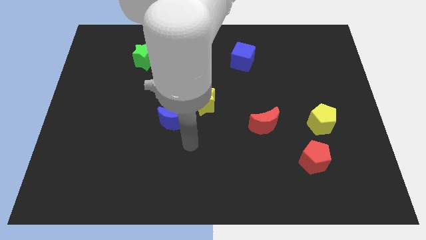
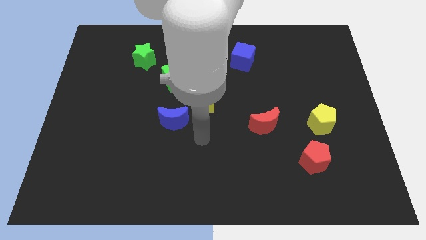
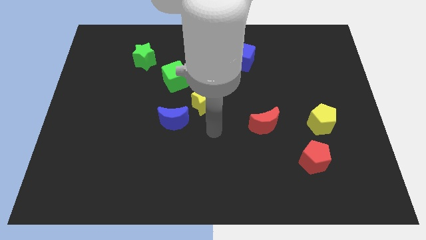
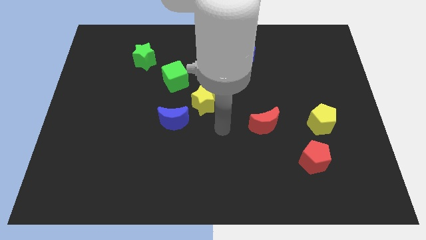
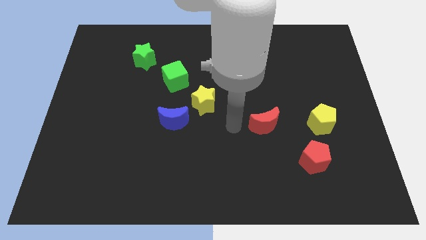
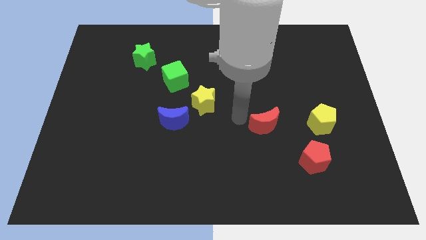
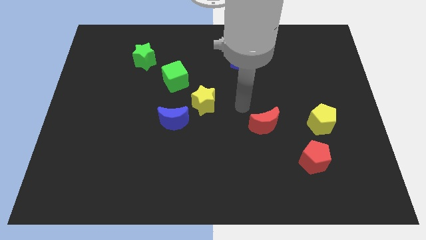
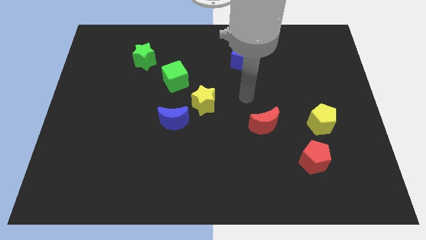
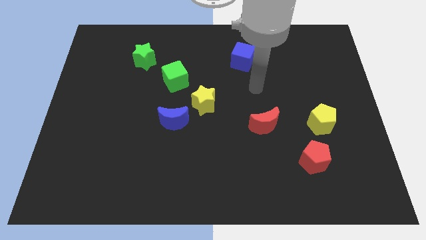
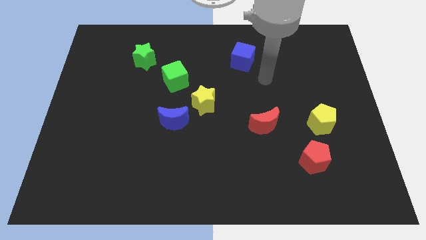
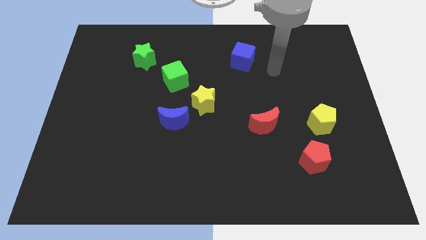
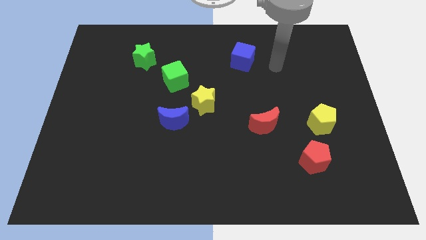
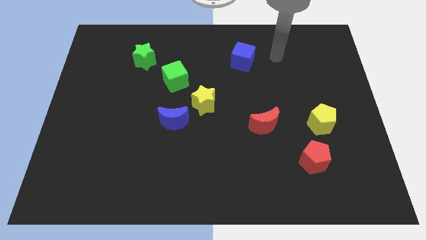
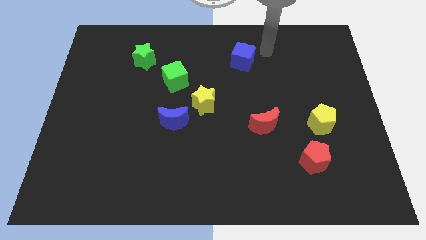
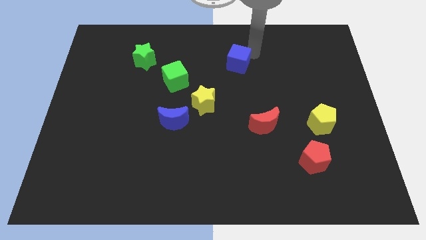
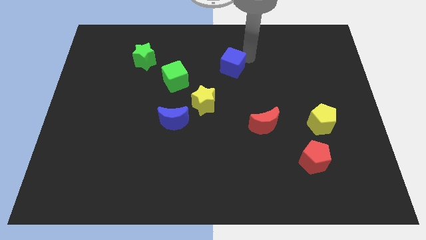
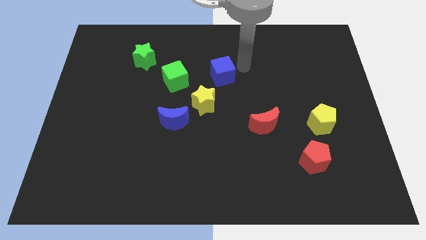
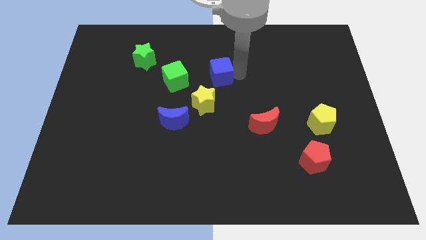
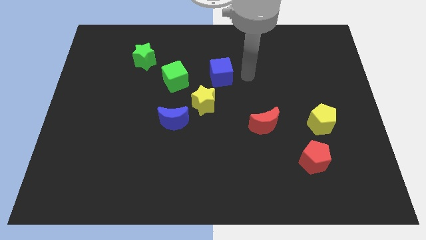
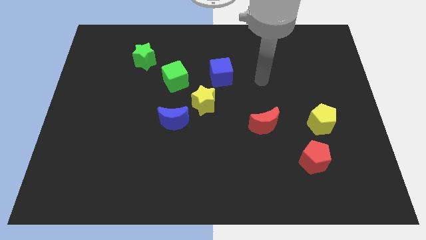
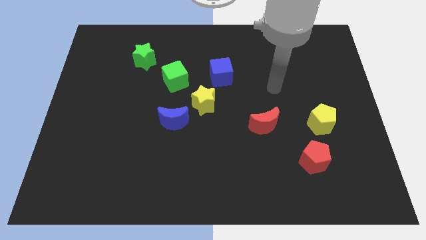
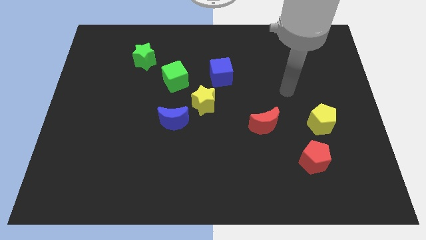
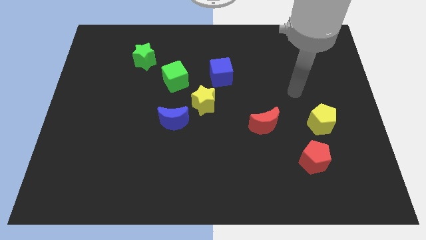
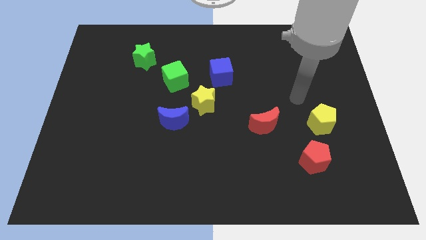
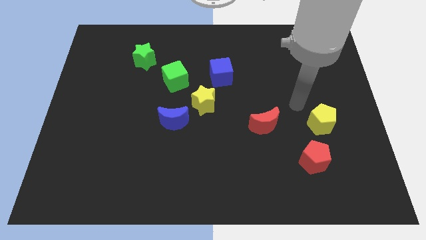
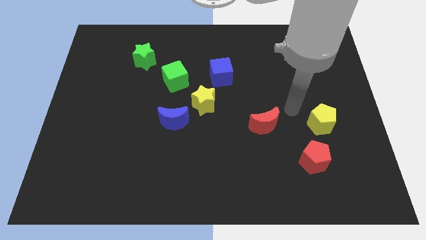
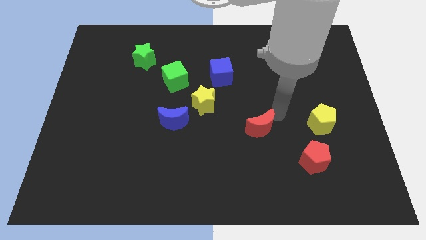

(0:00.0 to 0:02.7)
push the blue cube to the right of the green cube

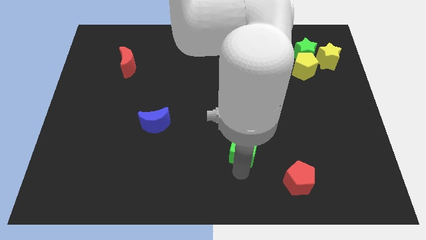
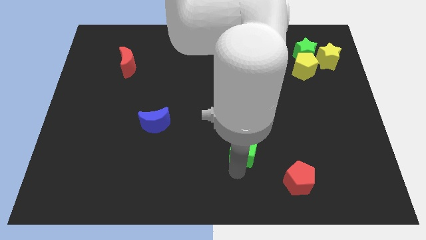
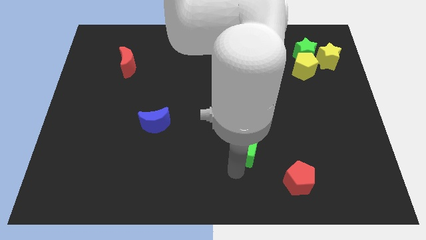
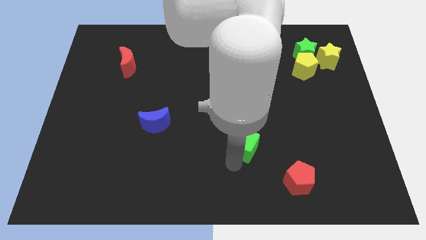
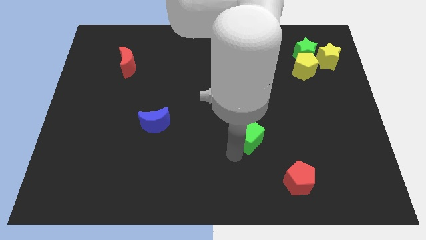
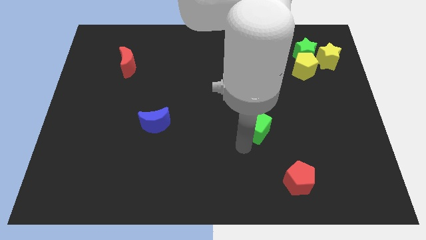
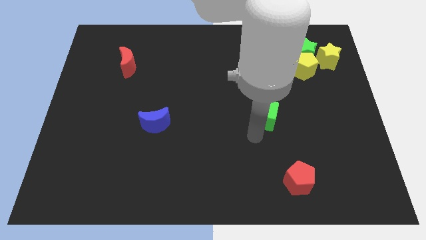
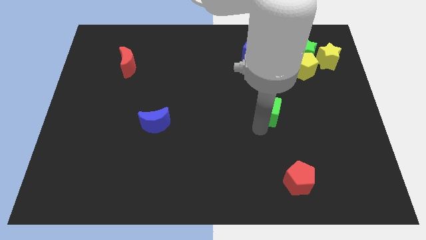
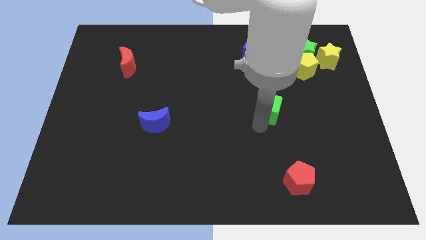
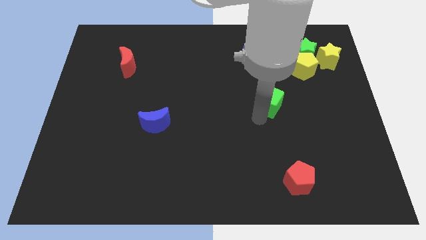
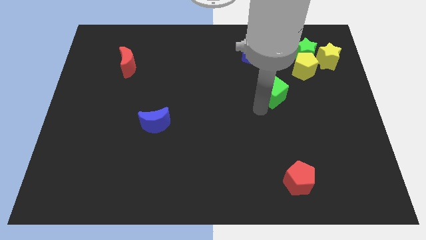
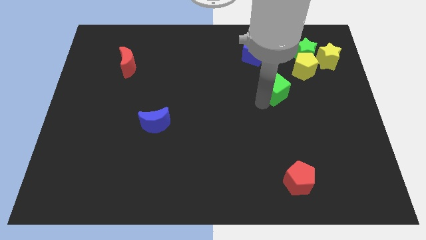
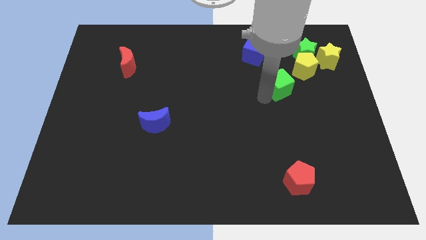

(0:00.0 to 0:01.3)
move the green cube diagonally on the bottom left side of the yellow pentagon

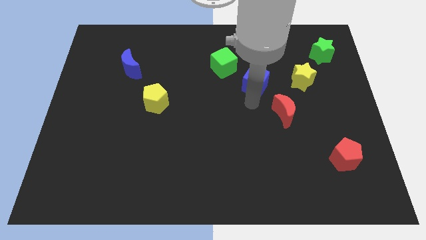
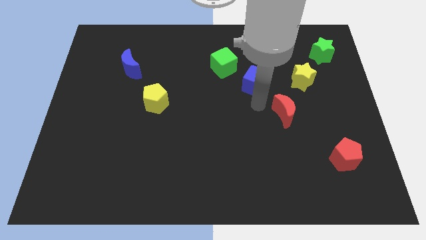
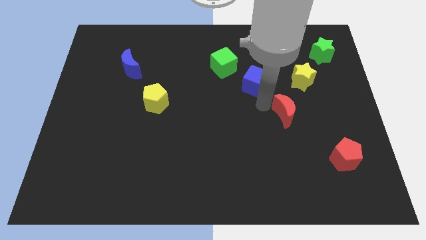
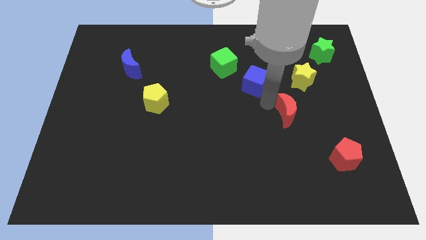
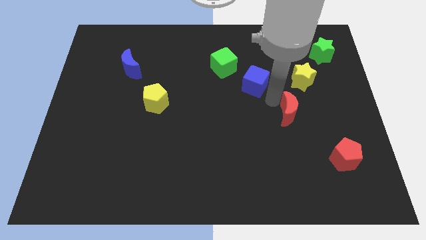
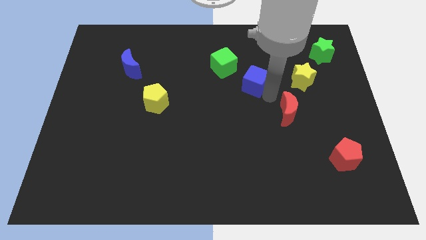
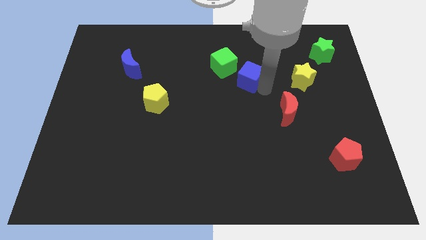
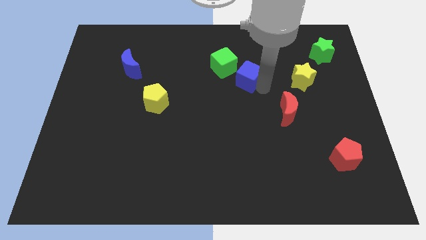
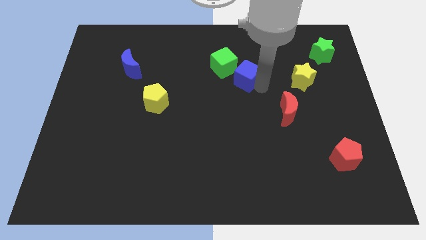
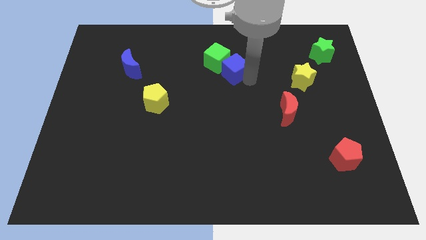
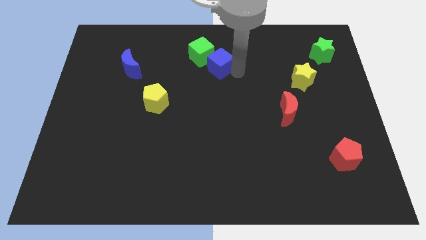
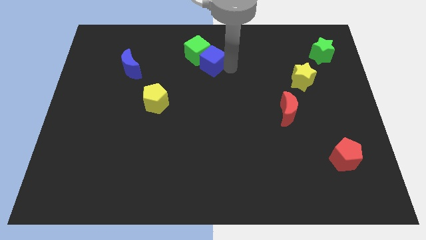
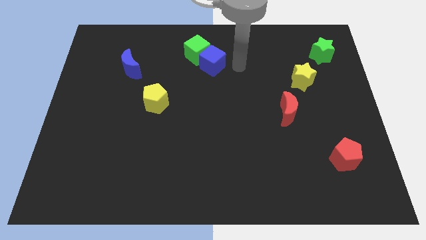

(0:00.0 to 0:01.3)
move the blue cube into the green cube

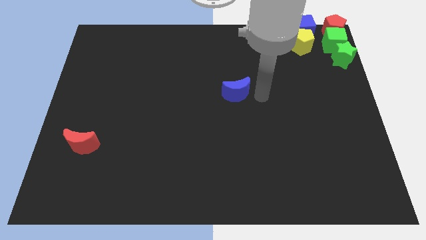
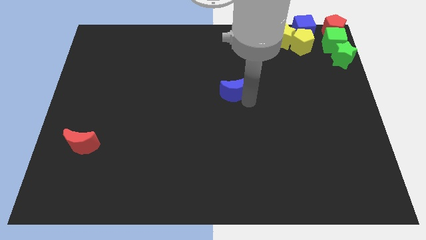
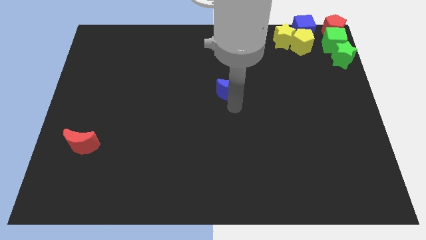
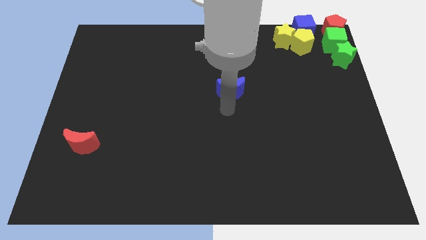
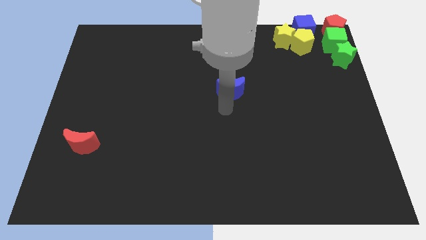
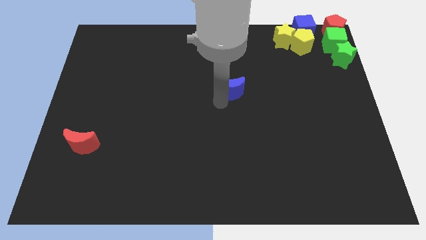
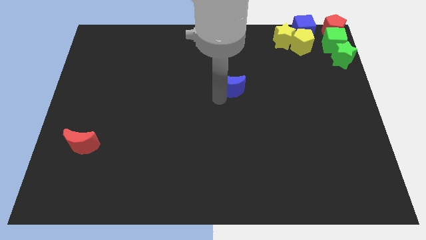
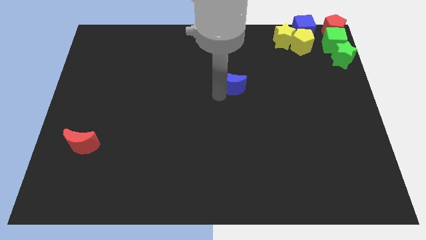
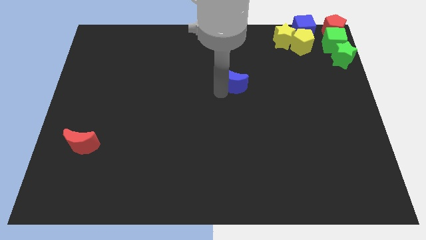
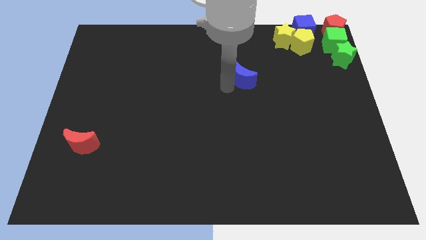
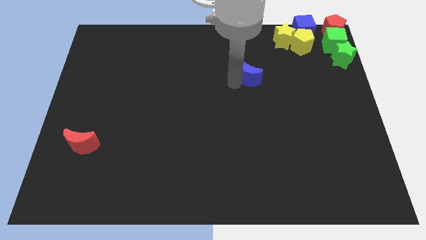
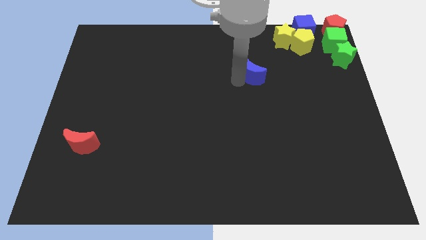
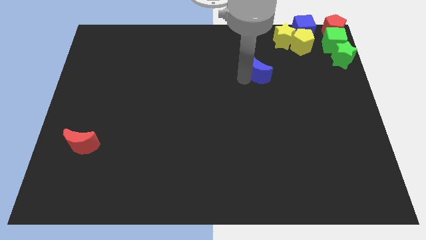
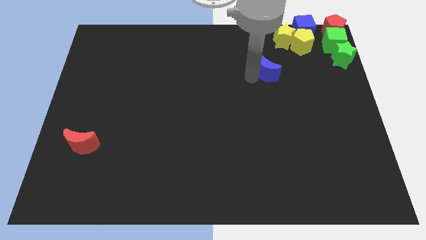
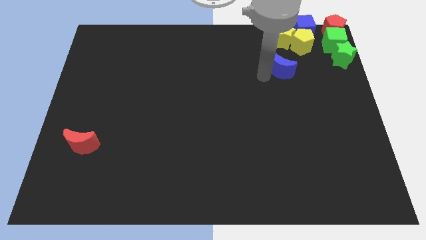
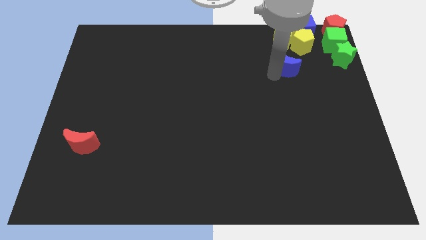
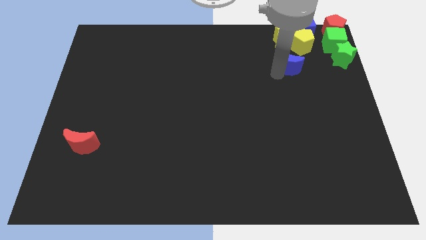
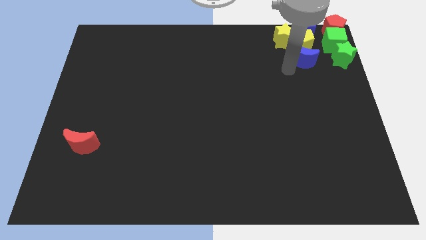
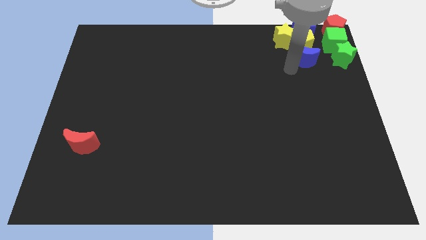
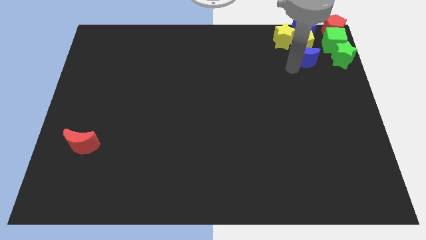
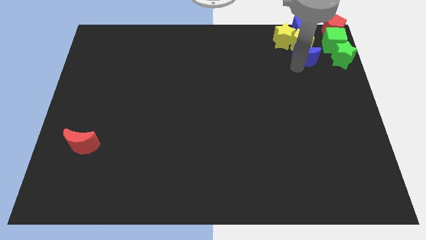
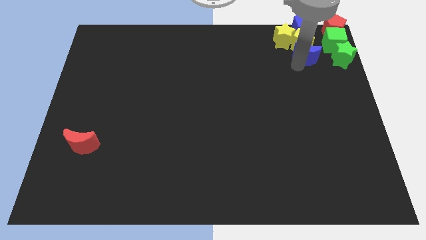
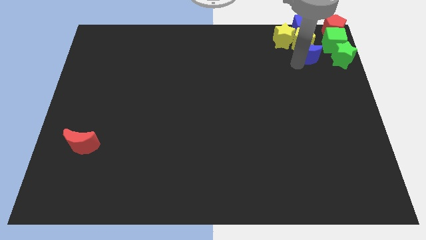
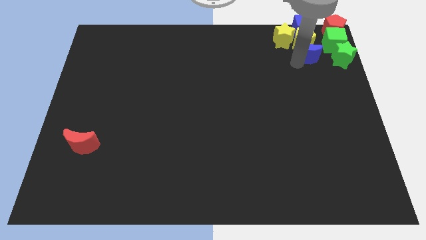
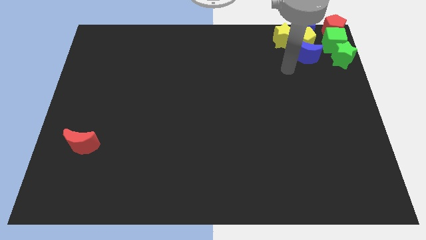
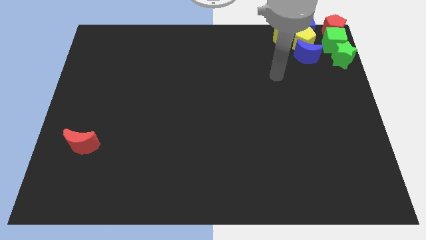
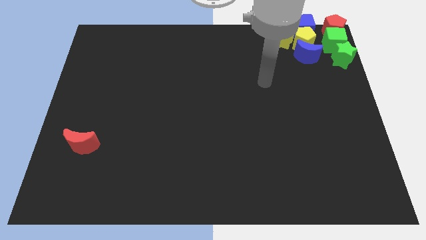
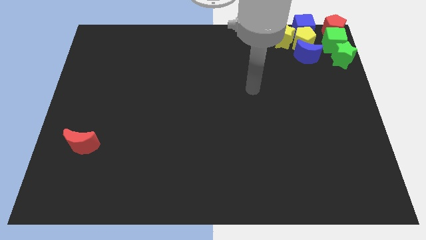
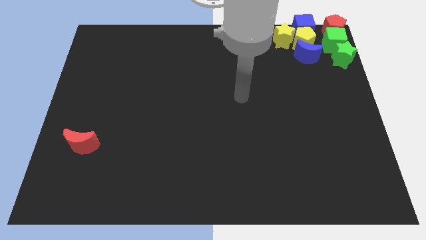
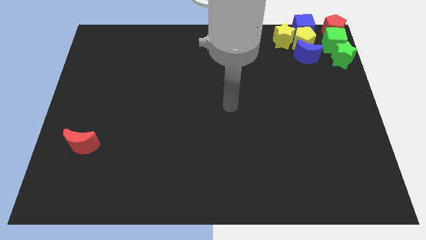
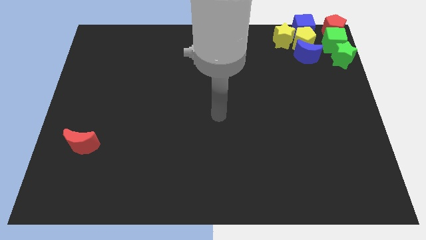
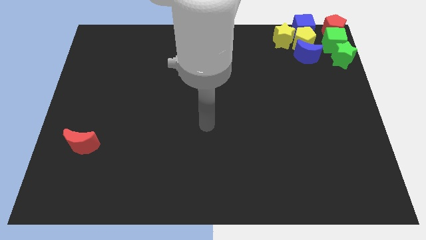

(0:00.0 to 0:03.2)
push the blue crescent to the top right of the board

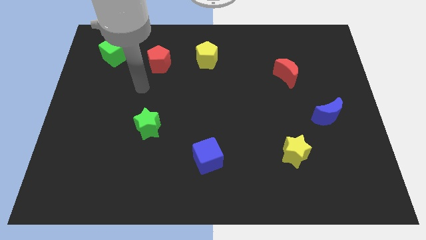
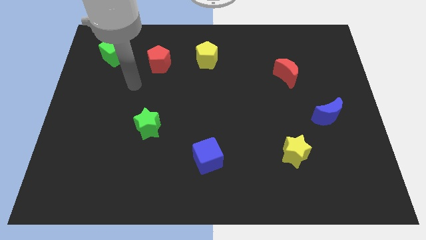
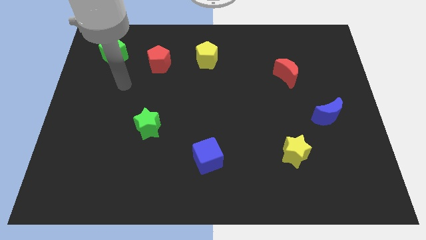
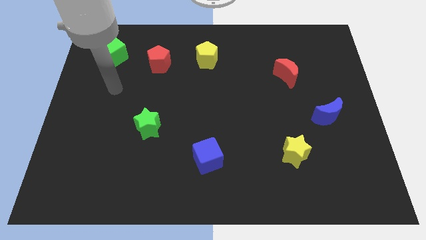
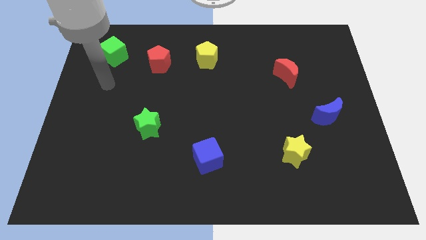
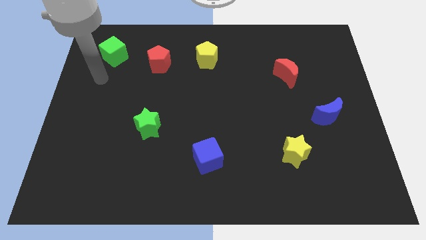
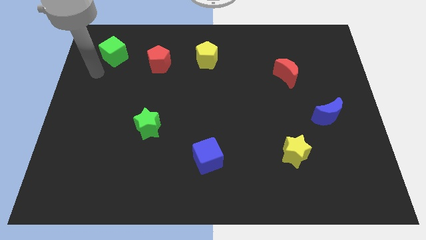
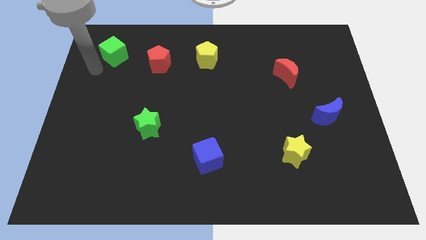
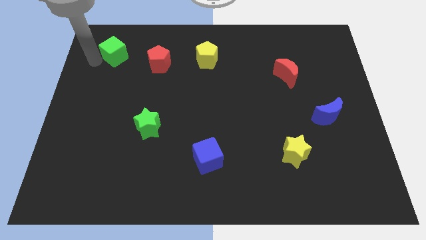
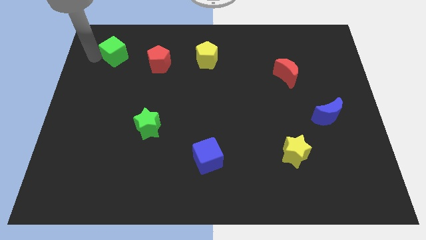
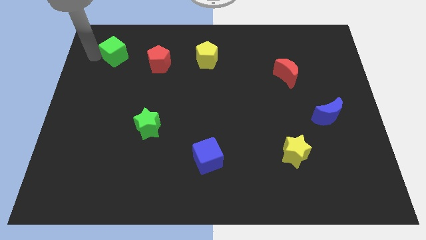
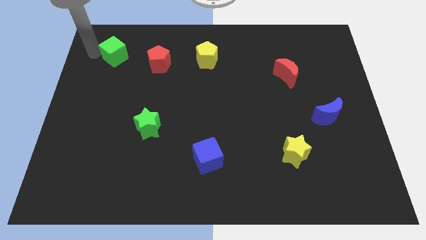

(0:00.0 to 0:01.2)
move your arm near to the green cube
